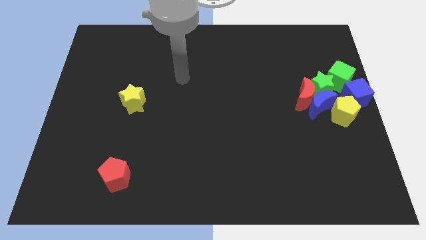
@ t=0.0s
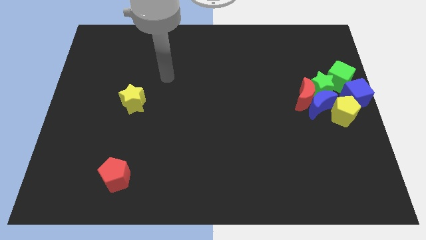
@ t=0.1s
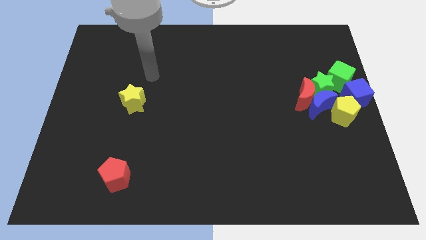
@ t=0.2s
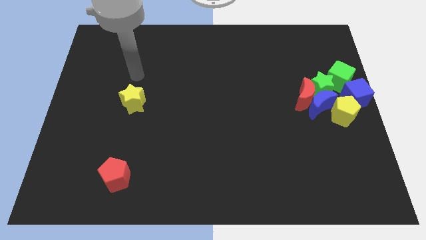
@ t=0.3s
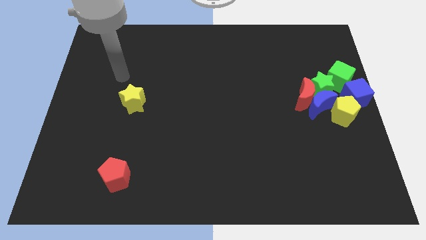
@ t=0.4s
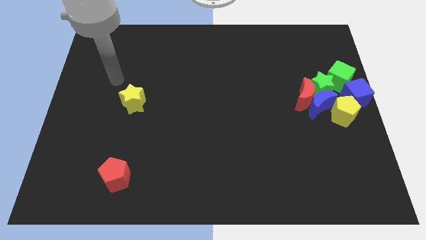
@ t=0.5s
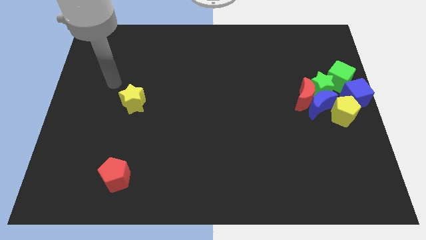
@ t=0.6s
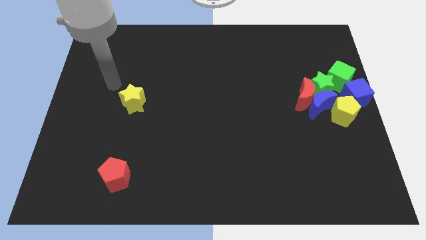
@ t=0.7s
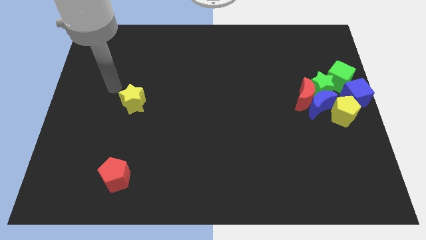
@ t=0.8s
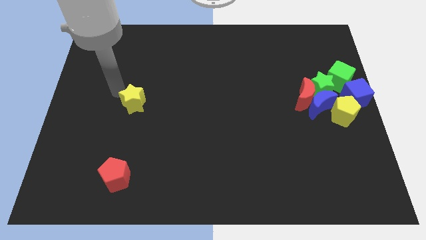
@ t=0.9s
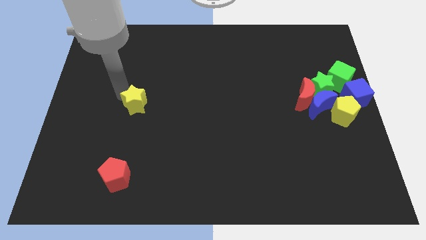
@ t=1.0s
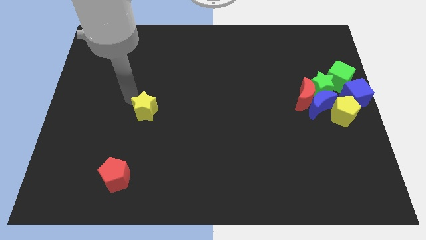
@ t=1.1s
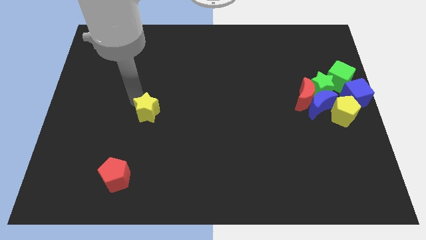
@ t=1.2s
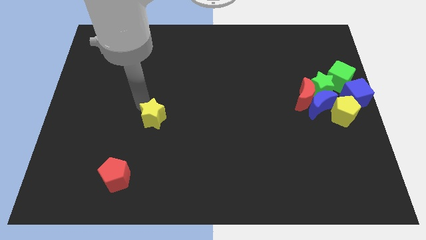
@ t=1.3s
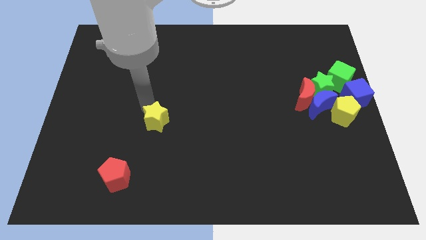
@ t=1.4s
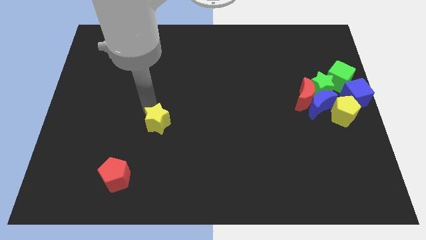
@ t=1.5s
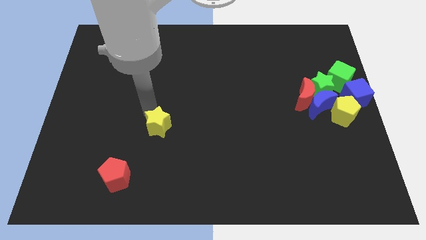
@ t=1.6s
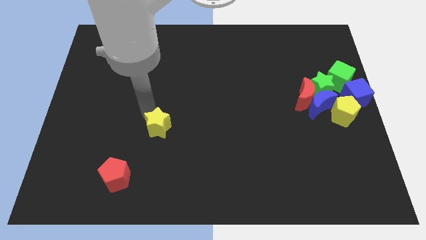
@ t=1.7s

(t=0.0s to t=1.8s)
move the yellow star to the top right of the red pentagon

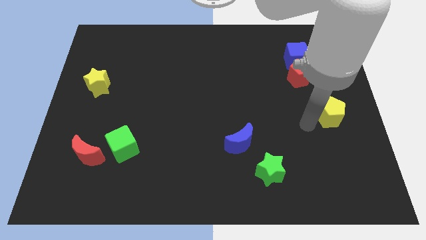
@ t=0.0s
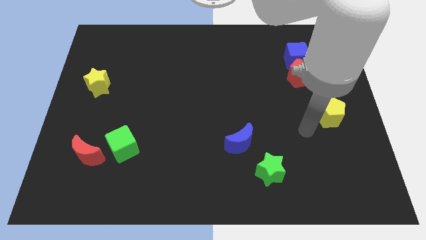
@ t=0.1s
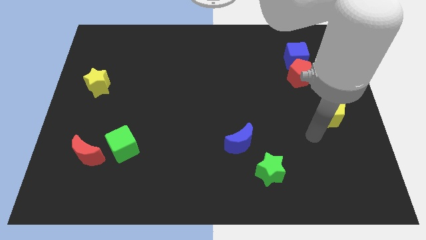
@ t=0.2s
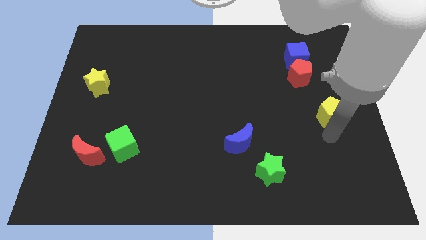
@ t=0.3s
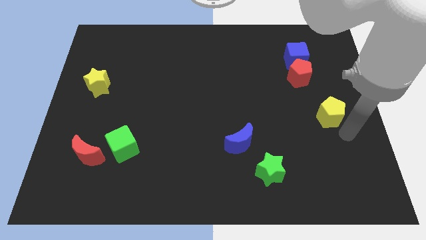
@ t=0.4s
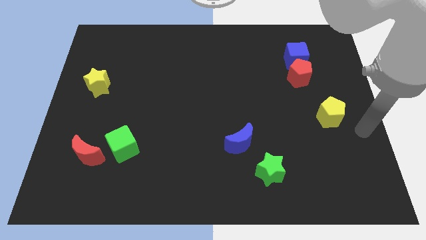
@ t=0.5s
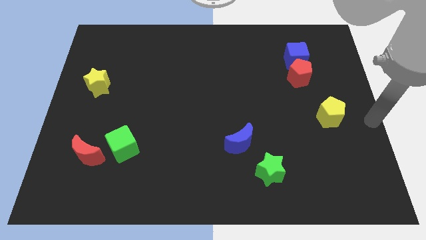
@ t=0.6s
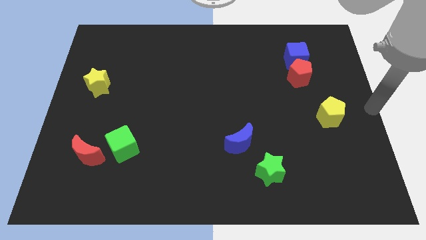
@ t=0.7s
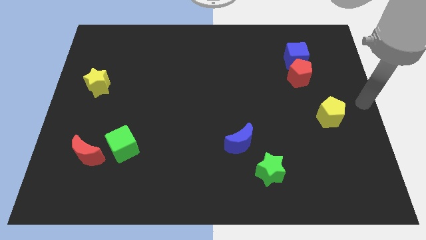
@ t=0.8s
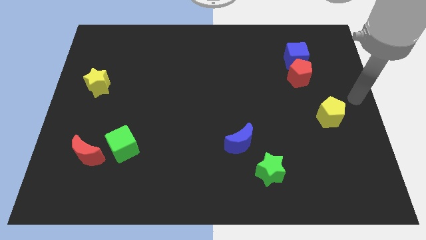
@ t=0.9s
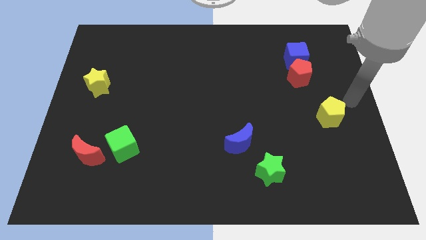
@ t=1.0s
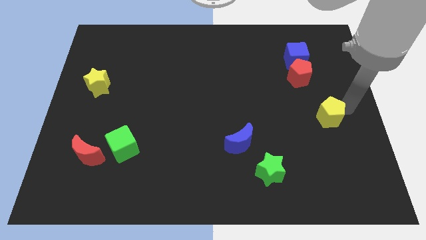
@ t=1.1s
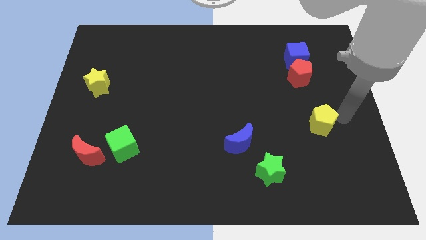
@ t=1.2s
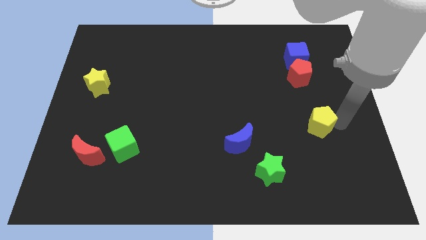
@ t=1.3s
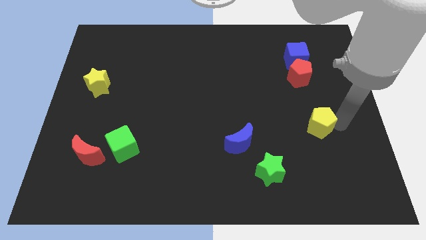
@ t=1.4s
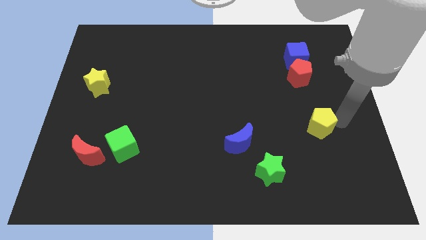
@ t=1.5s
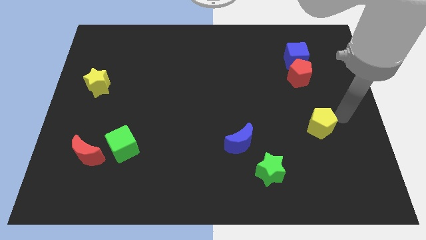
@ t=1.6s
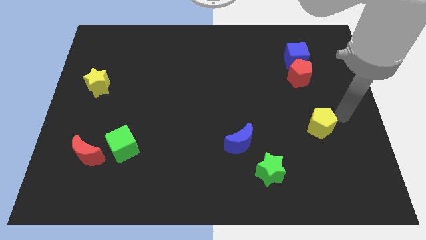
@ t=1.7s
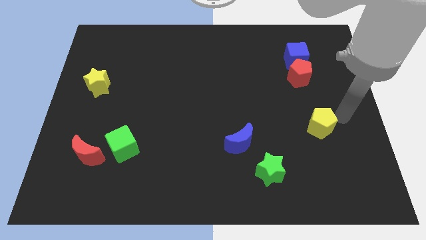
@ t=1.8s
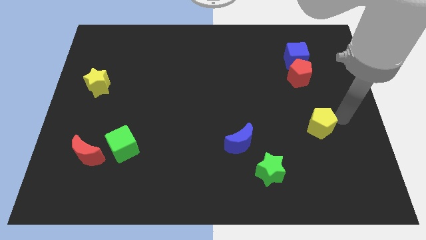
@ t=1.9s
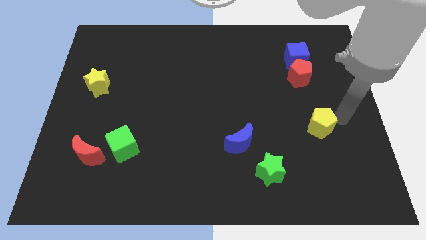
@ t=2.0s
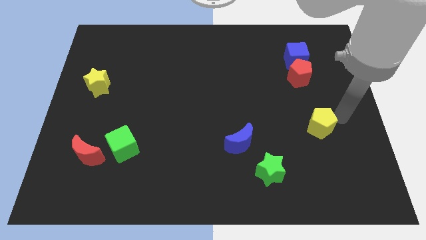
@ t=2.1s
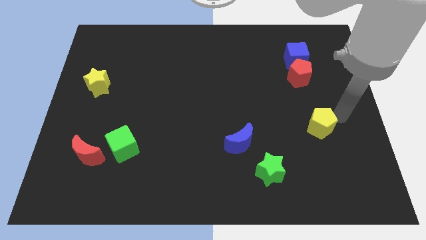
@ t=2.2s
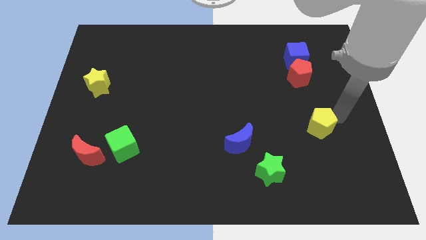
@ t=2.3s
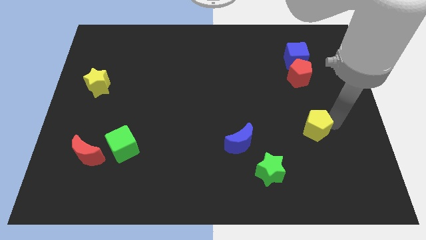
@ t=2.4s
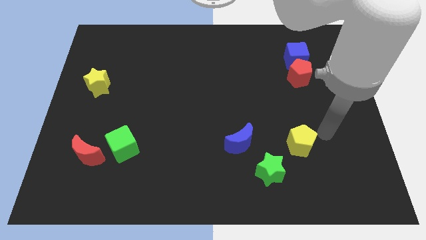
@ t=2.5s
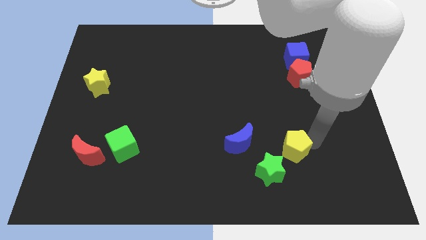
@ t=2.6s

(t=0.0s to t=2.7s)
push yellow pentagon towards the bottom side of the board

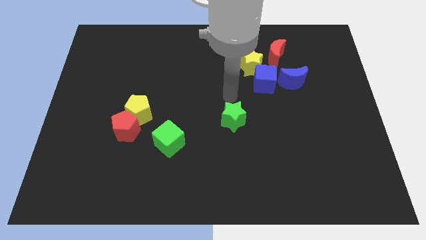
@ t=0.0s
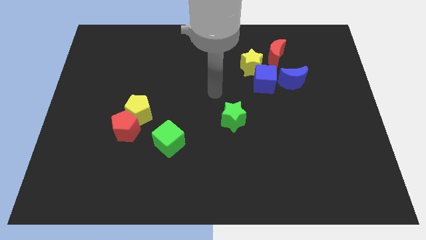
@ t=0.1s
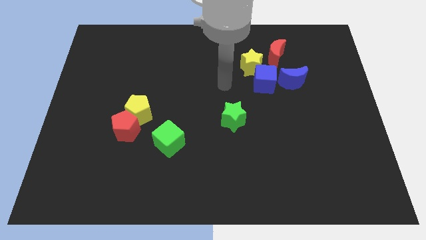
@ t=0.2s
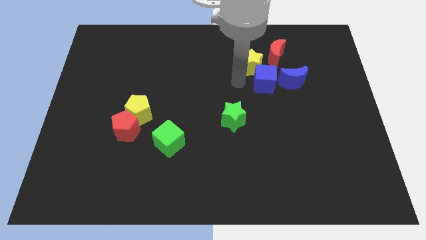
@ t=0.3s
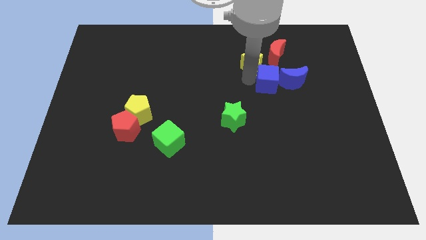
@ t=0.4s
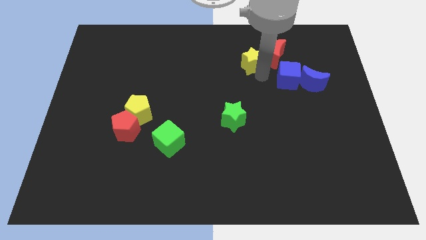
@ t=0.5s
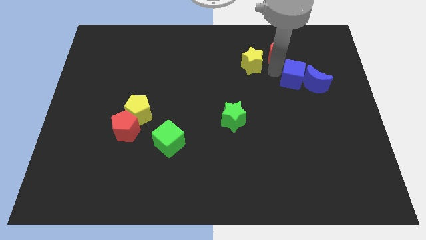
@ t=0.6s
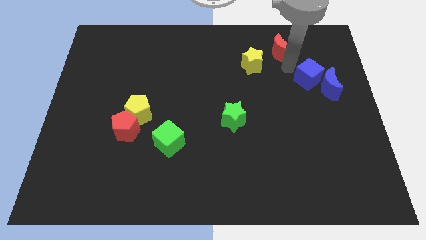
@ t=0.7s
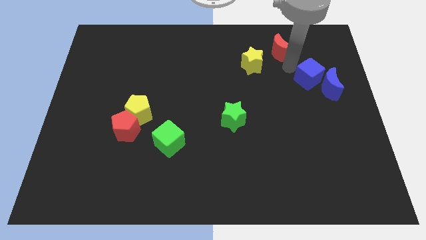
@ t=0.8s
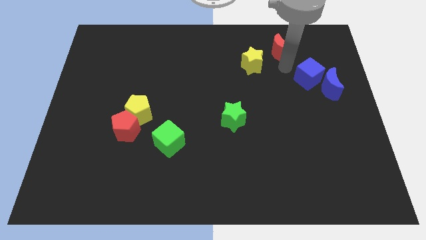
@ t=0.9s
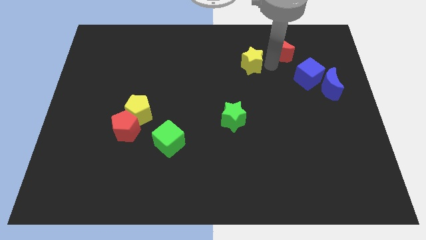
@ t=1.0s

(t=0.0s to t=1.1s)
separate yellow star and blue blocks

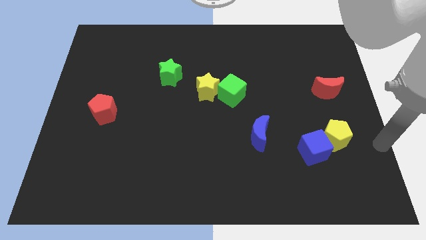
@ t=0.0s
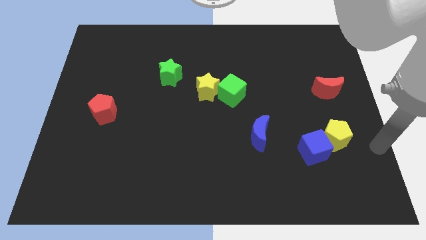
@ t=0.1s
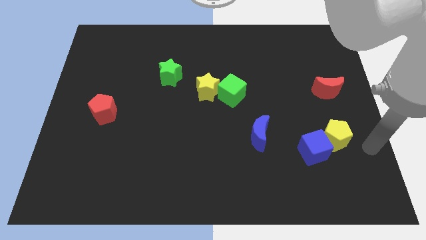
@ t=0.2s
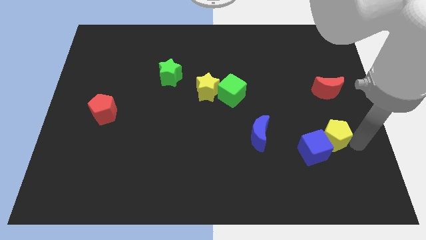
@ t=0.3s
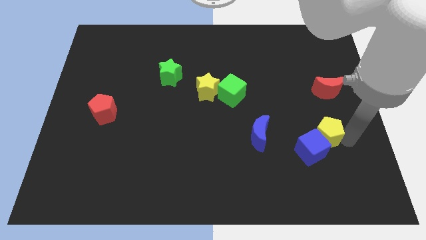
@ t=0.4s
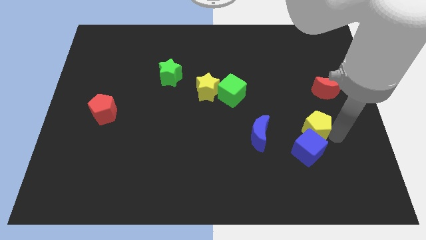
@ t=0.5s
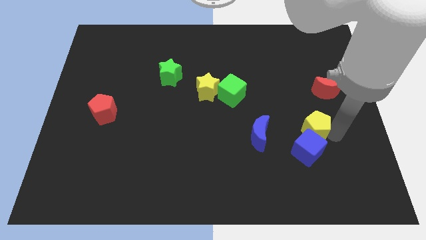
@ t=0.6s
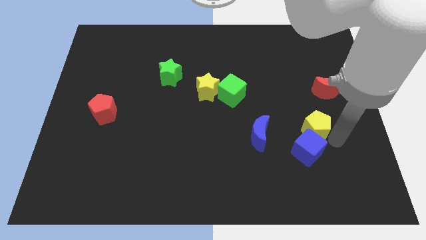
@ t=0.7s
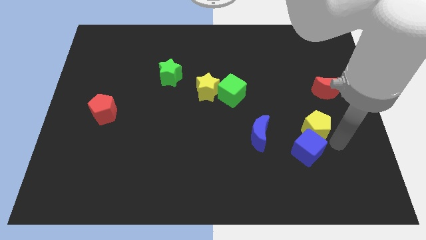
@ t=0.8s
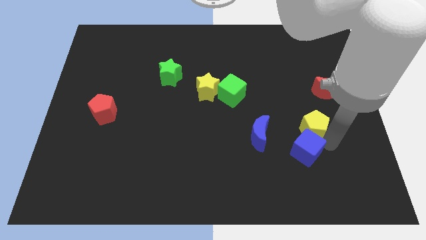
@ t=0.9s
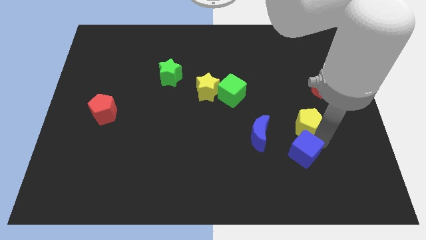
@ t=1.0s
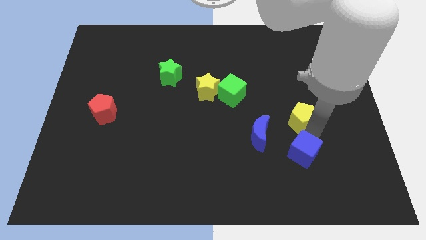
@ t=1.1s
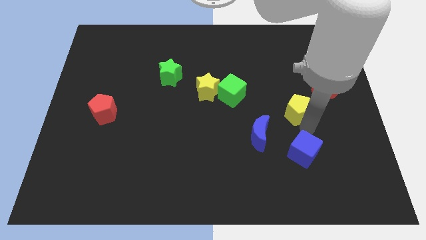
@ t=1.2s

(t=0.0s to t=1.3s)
slide the yellow pentagon to the top side of the blue cube

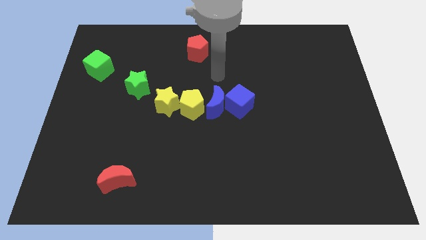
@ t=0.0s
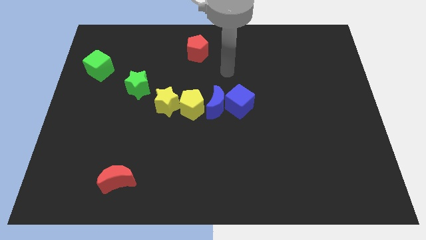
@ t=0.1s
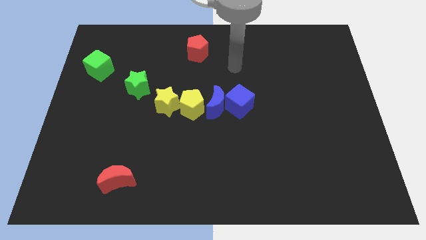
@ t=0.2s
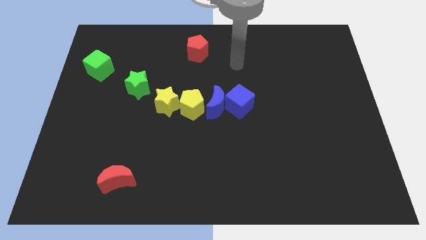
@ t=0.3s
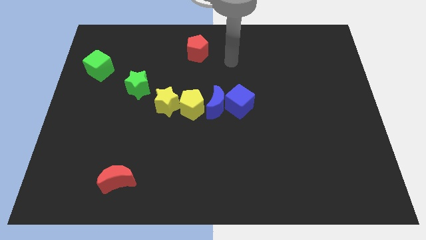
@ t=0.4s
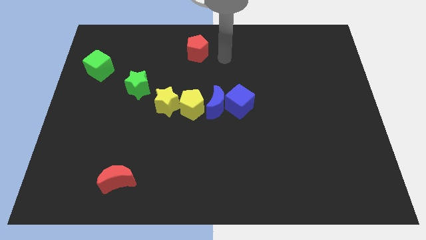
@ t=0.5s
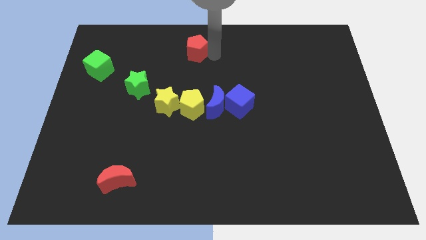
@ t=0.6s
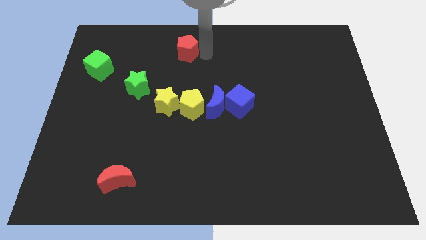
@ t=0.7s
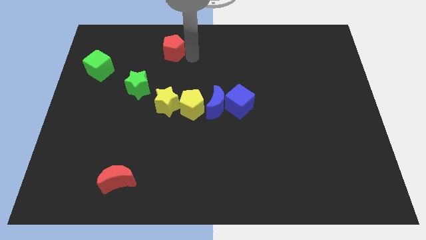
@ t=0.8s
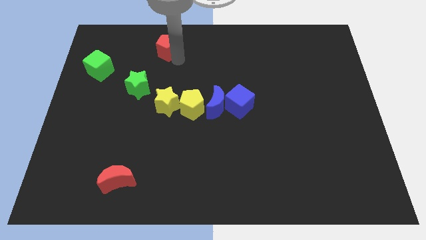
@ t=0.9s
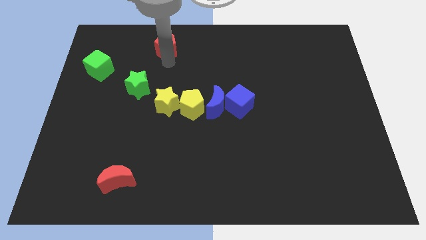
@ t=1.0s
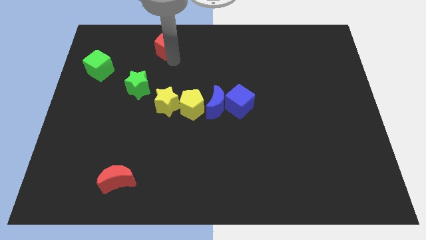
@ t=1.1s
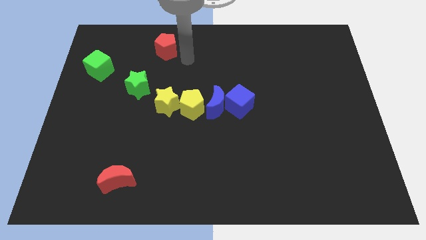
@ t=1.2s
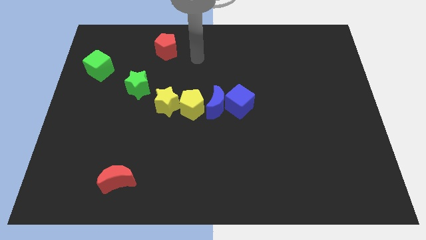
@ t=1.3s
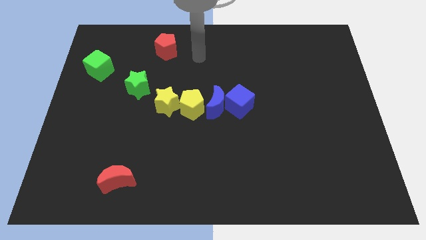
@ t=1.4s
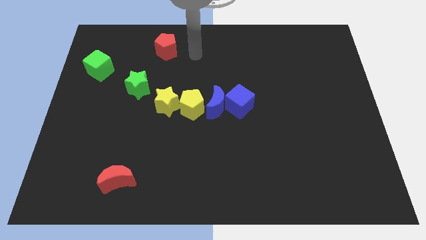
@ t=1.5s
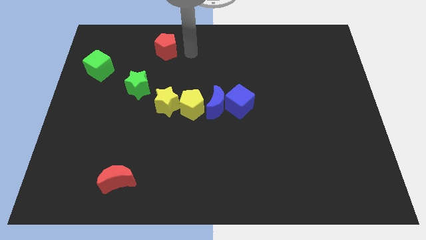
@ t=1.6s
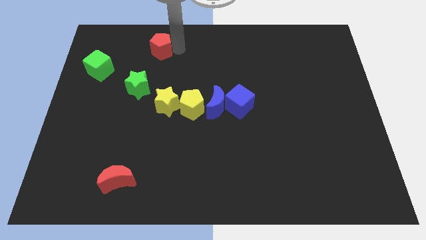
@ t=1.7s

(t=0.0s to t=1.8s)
push the red pentagon slightly to its left

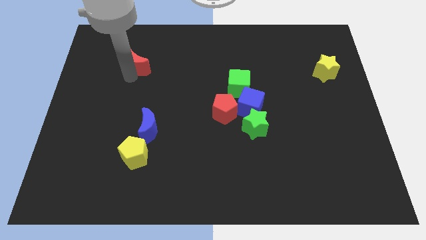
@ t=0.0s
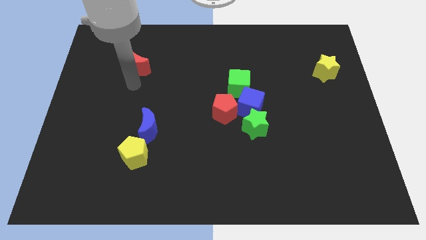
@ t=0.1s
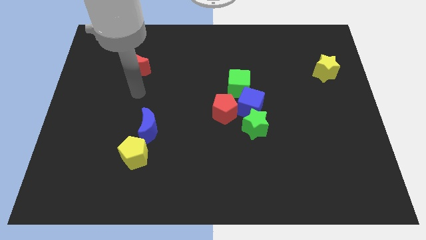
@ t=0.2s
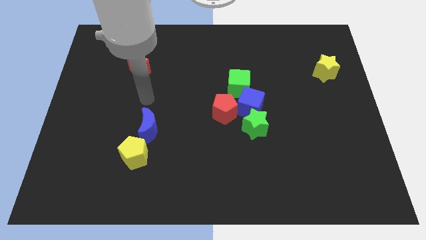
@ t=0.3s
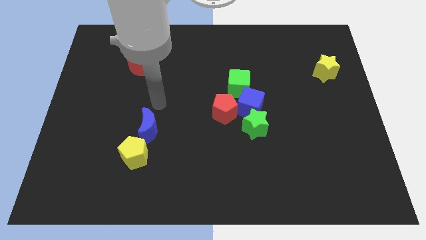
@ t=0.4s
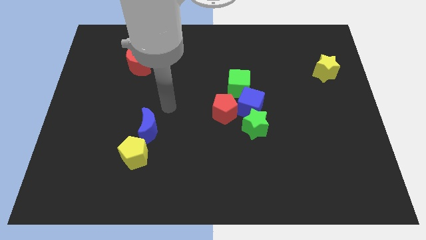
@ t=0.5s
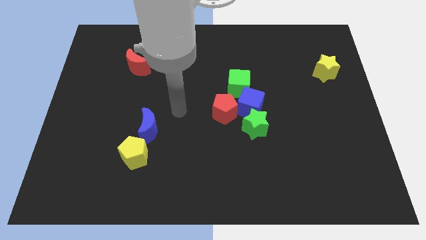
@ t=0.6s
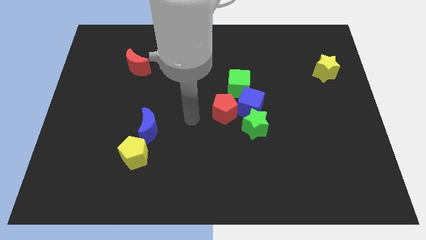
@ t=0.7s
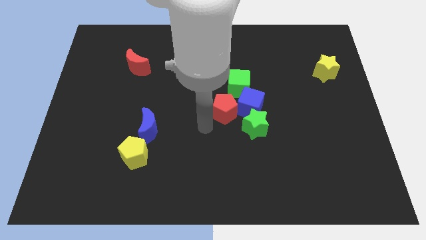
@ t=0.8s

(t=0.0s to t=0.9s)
move the arm away from the red moon
